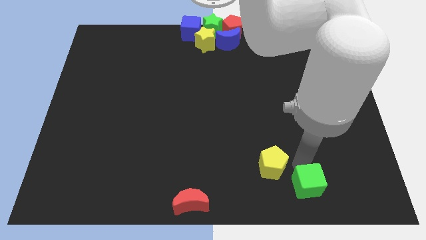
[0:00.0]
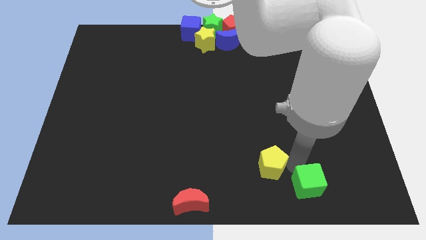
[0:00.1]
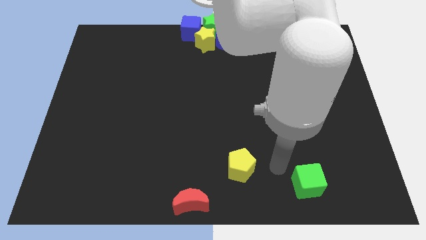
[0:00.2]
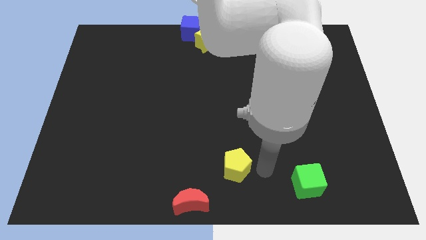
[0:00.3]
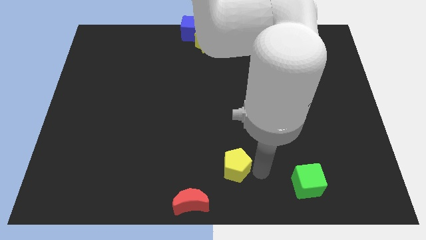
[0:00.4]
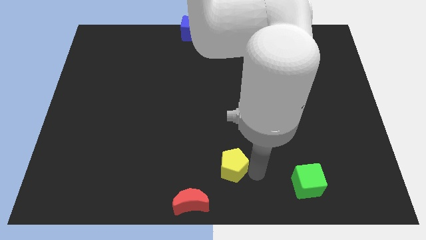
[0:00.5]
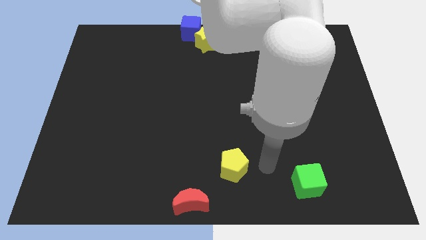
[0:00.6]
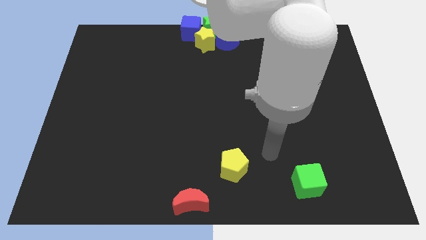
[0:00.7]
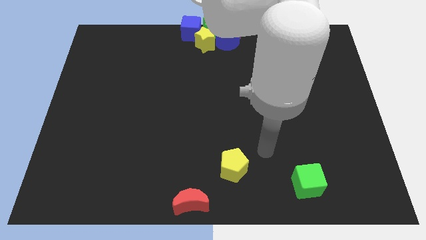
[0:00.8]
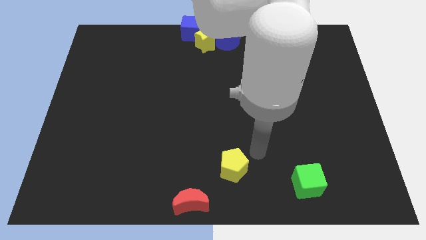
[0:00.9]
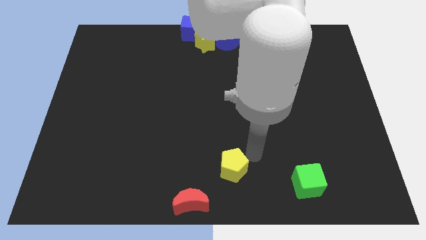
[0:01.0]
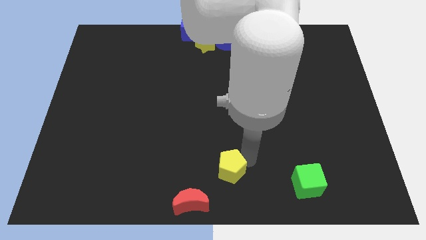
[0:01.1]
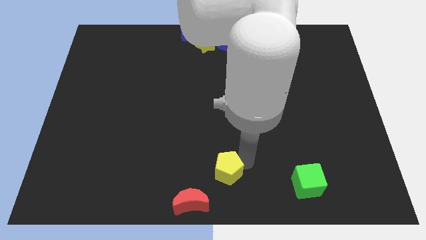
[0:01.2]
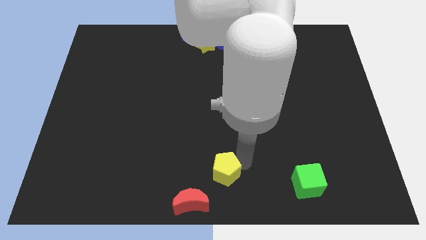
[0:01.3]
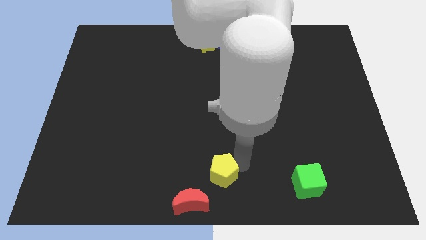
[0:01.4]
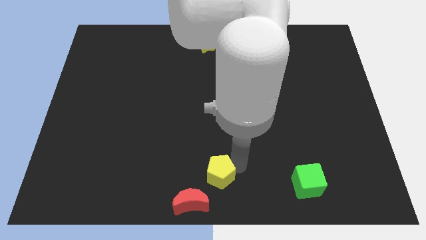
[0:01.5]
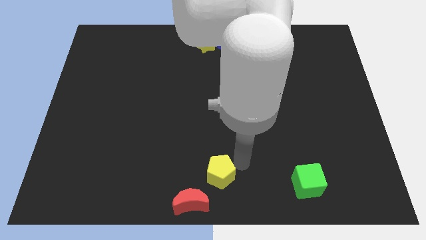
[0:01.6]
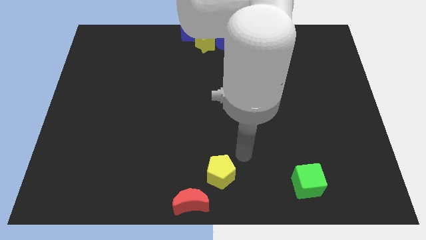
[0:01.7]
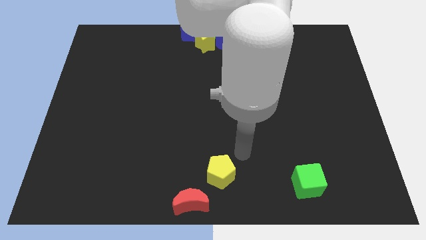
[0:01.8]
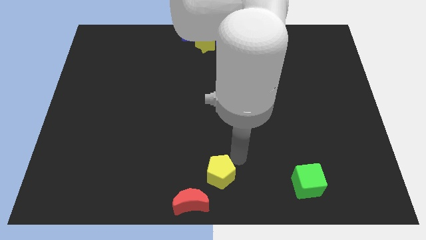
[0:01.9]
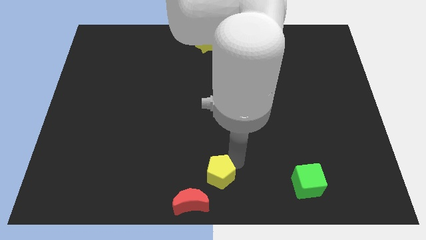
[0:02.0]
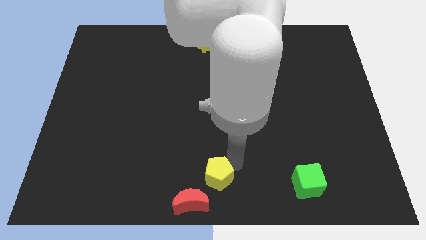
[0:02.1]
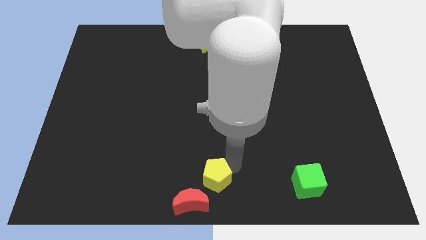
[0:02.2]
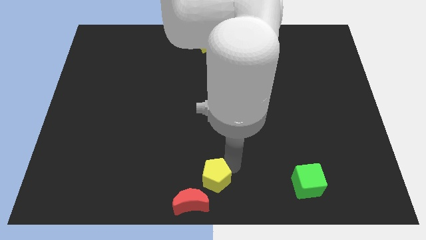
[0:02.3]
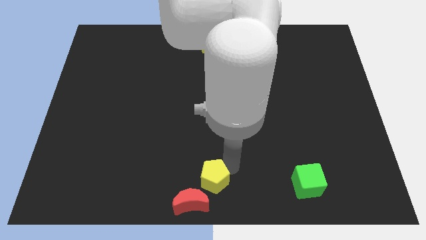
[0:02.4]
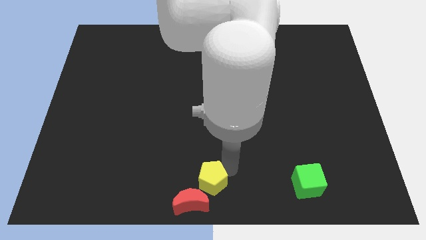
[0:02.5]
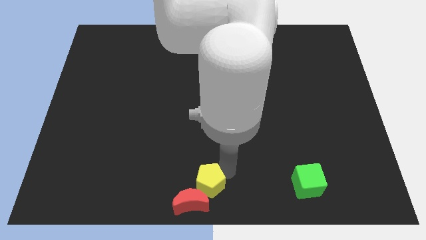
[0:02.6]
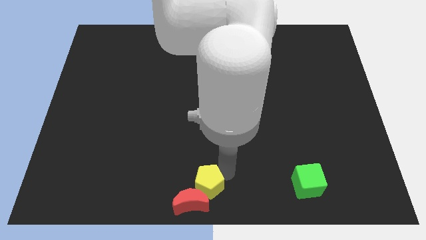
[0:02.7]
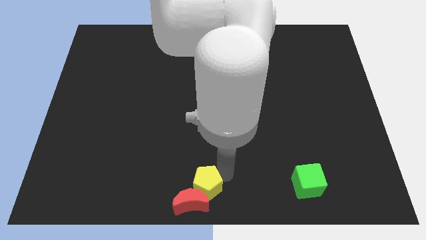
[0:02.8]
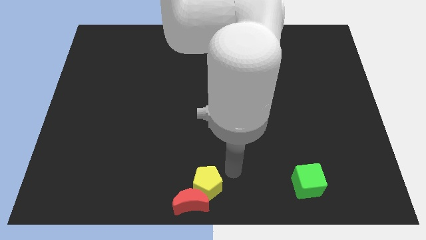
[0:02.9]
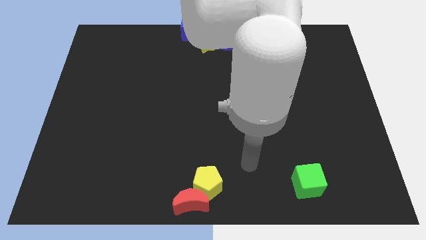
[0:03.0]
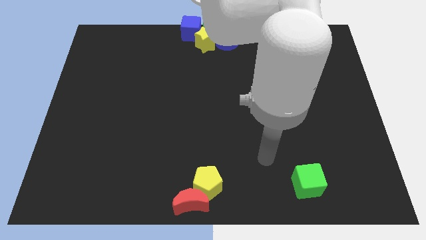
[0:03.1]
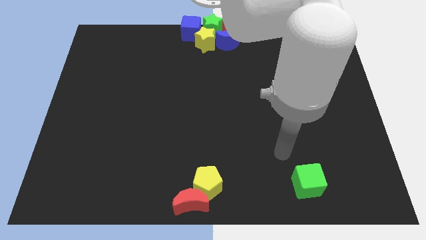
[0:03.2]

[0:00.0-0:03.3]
push yellow pentagon close to the red crescent

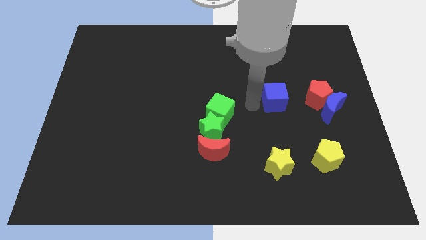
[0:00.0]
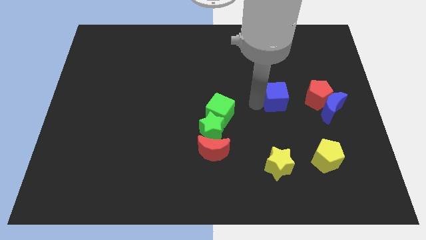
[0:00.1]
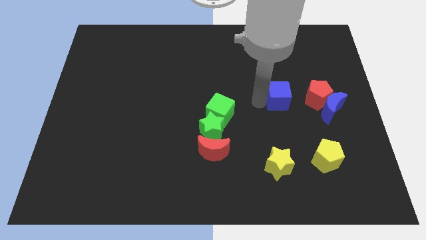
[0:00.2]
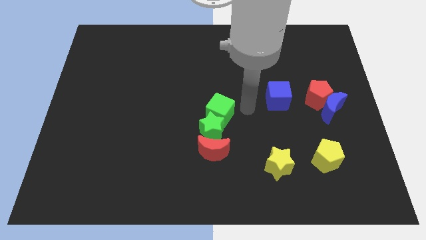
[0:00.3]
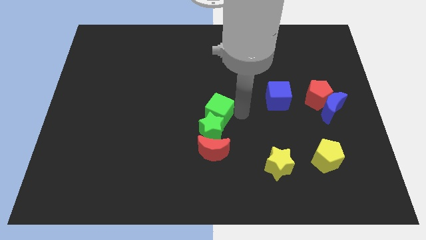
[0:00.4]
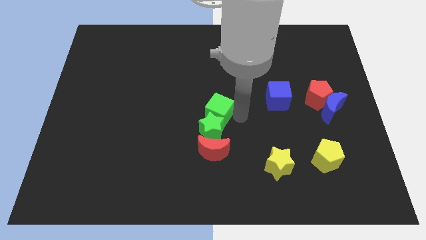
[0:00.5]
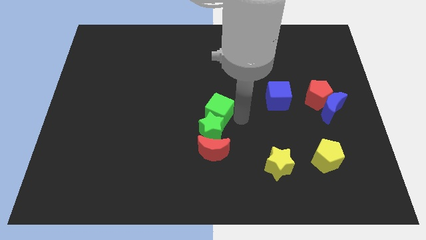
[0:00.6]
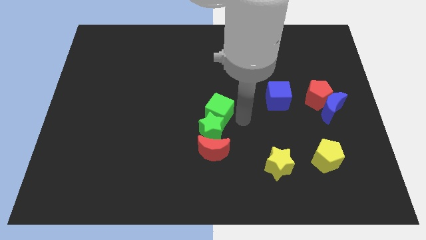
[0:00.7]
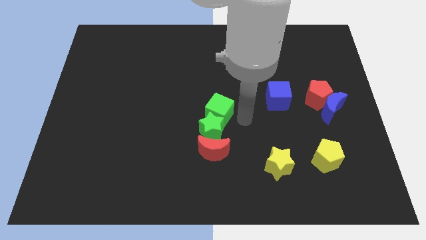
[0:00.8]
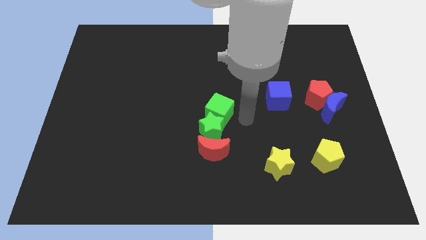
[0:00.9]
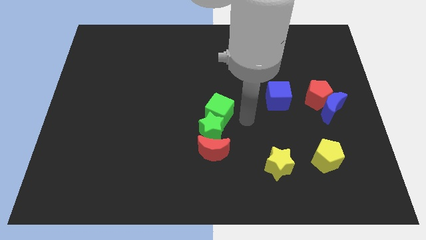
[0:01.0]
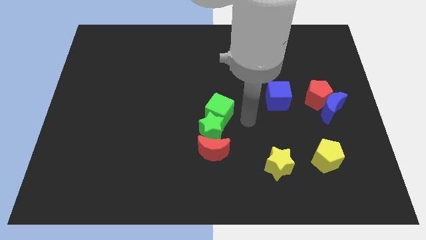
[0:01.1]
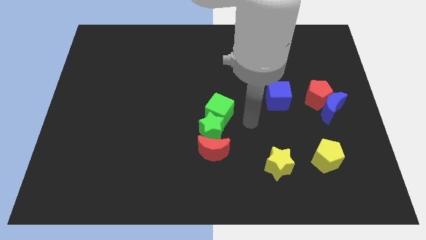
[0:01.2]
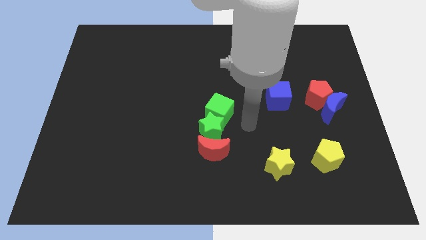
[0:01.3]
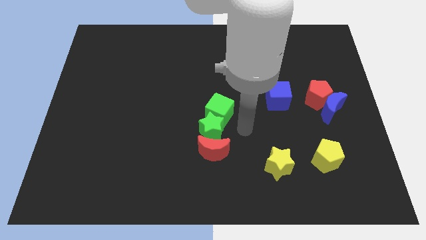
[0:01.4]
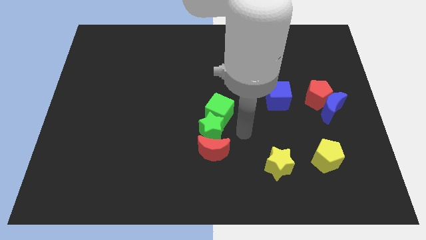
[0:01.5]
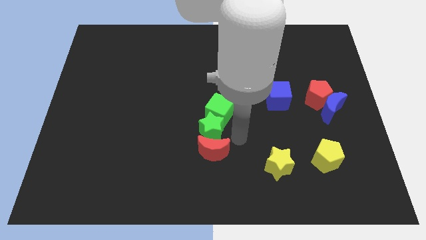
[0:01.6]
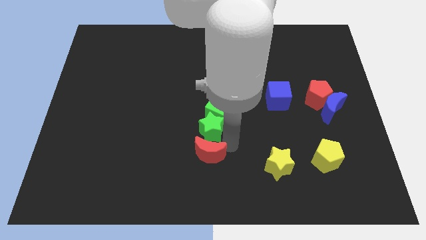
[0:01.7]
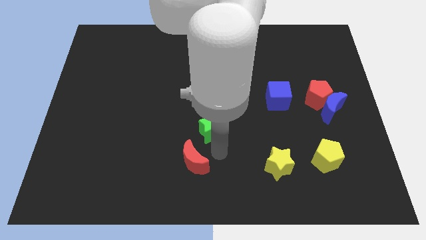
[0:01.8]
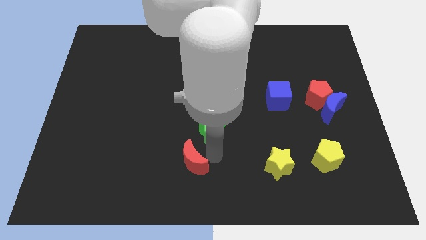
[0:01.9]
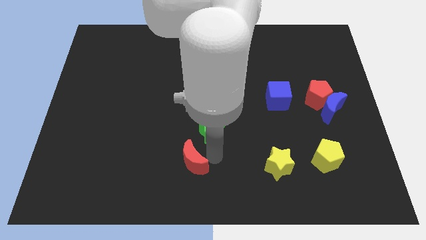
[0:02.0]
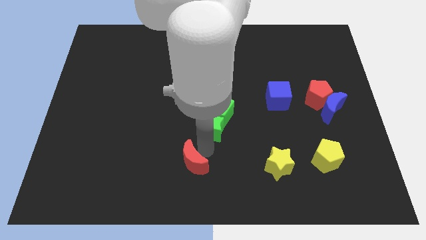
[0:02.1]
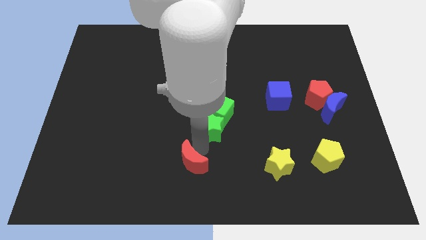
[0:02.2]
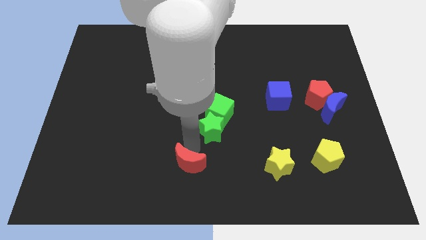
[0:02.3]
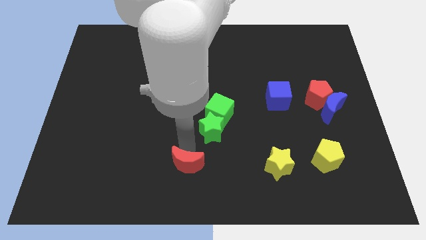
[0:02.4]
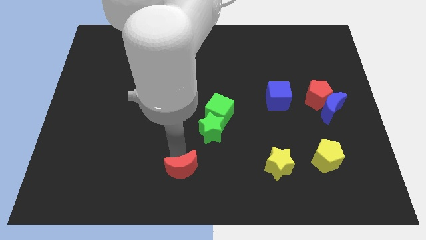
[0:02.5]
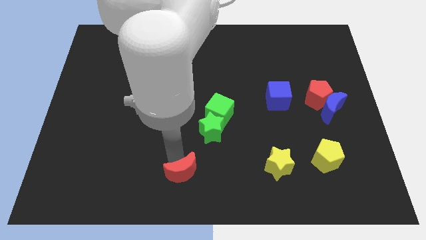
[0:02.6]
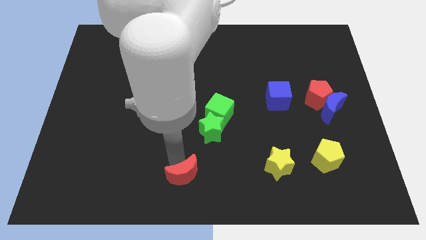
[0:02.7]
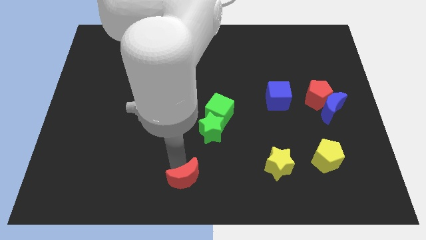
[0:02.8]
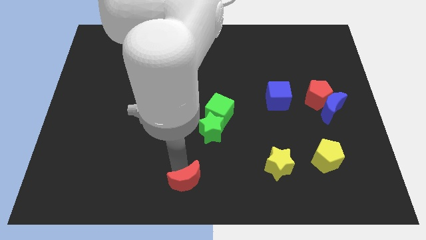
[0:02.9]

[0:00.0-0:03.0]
separate red moon from green blocks

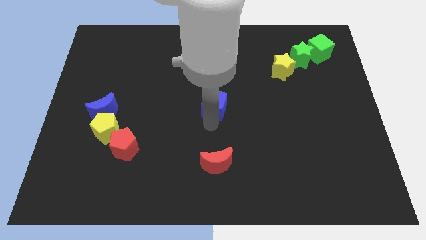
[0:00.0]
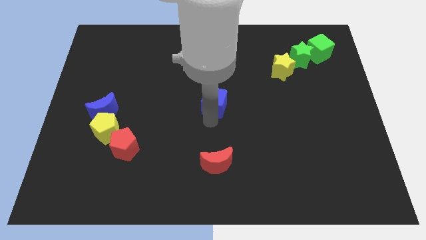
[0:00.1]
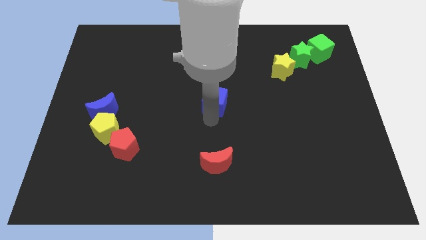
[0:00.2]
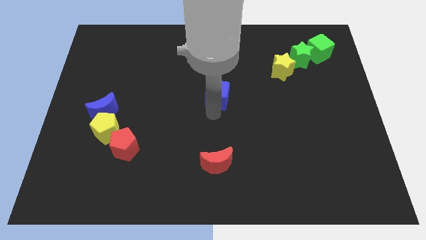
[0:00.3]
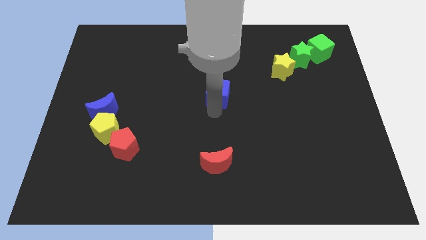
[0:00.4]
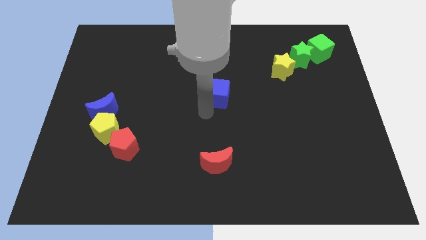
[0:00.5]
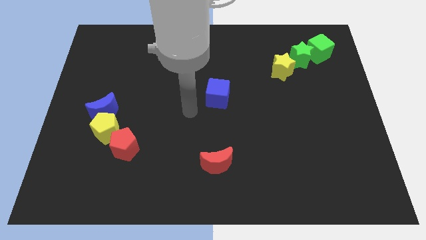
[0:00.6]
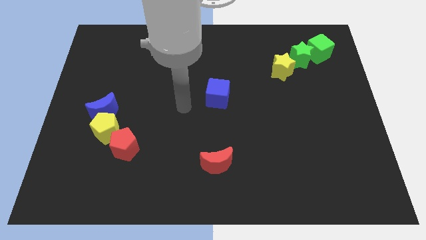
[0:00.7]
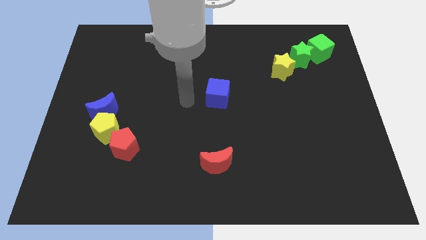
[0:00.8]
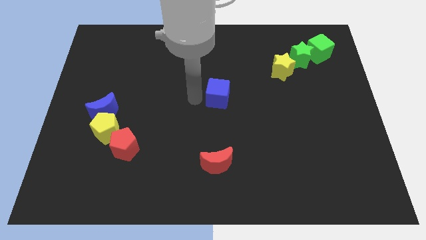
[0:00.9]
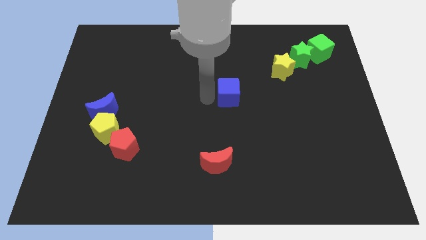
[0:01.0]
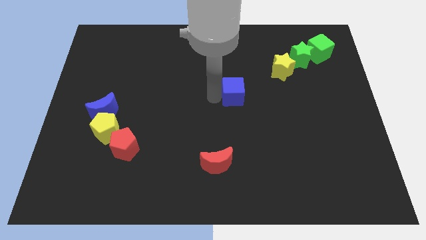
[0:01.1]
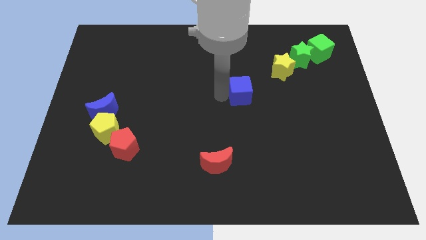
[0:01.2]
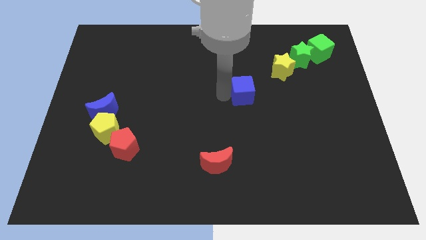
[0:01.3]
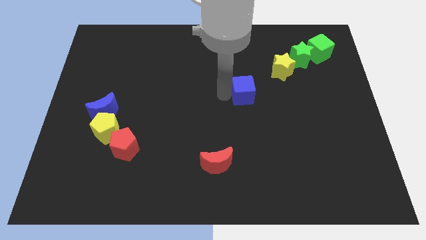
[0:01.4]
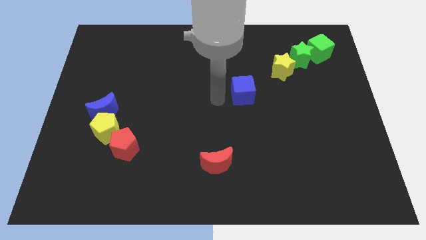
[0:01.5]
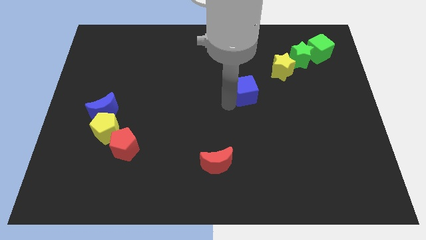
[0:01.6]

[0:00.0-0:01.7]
push the blue cube towards the yellow star

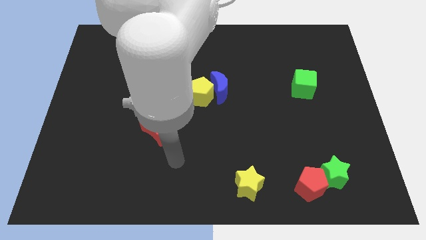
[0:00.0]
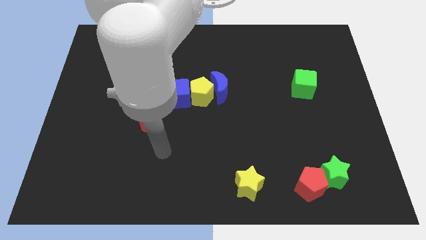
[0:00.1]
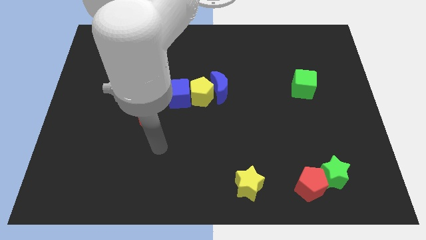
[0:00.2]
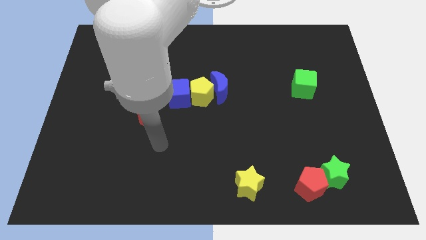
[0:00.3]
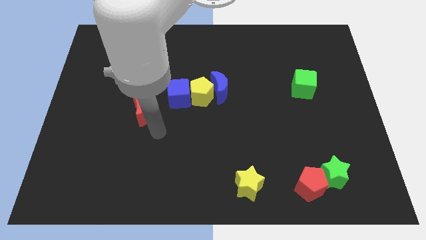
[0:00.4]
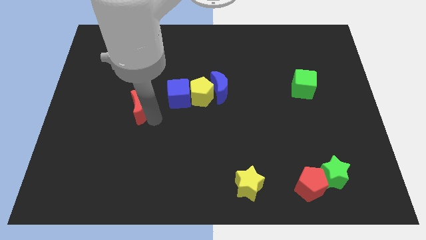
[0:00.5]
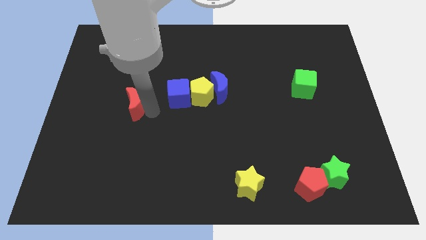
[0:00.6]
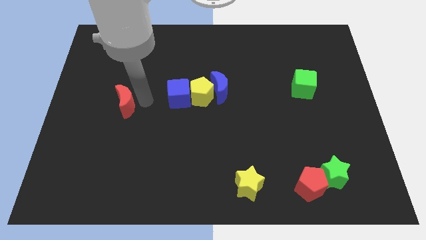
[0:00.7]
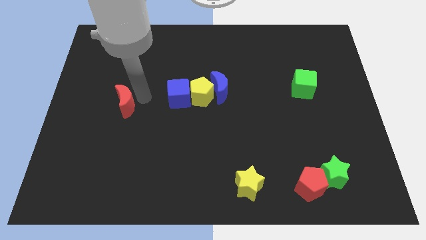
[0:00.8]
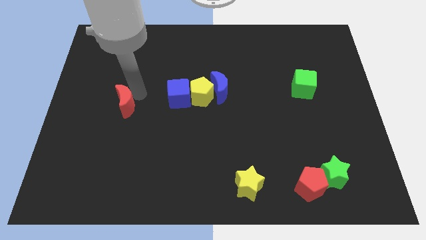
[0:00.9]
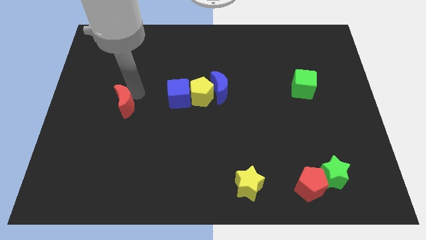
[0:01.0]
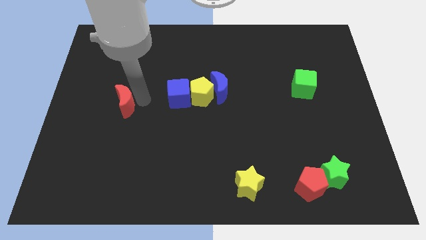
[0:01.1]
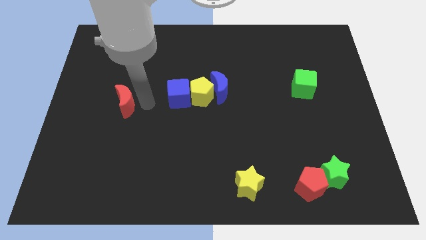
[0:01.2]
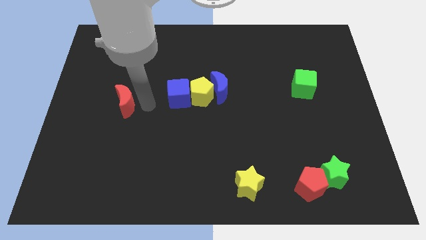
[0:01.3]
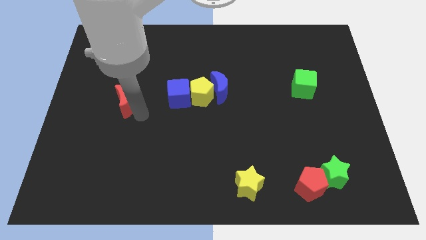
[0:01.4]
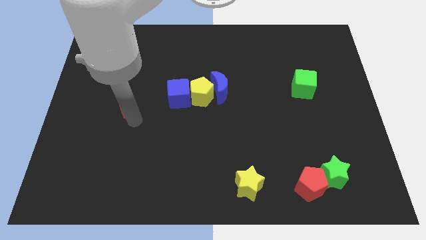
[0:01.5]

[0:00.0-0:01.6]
push the red crescent slightly towards the left side of the blue cube
